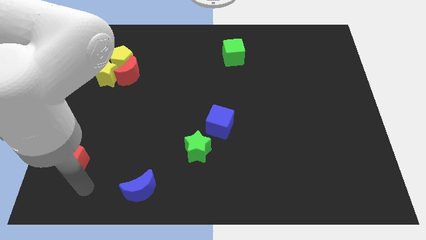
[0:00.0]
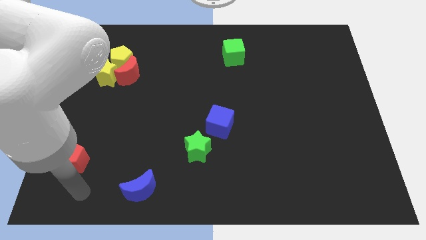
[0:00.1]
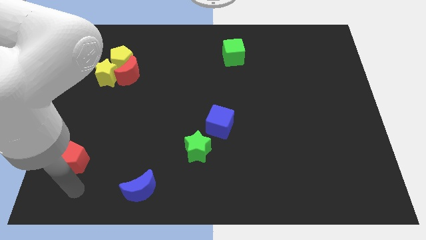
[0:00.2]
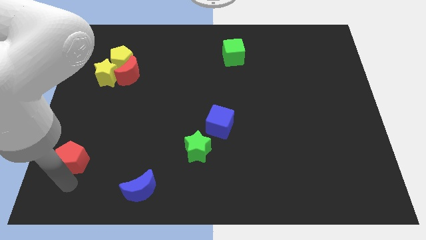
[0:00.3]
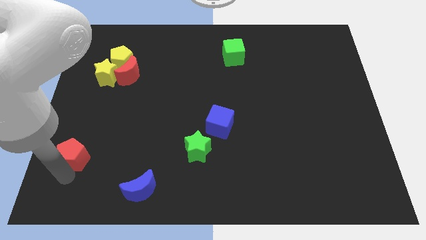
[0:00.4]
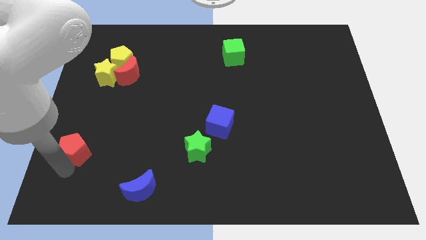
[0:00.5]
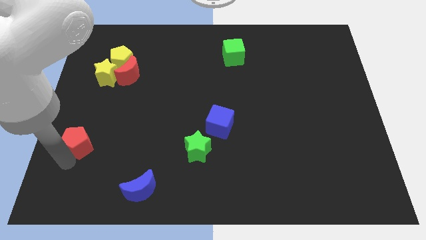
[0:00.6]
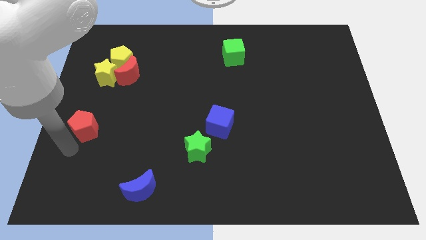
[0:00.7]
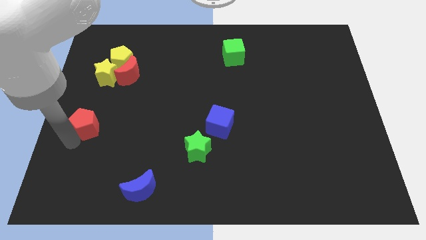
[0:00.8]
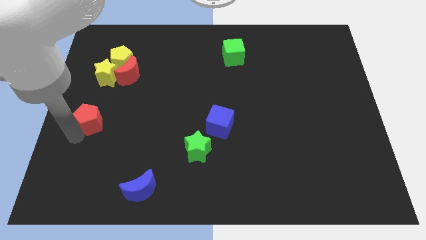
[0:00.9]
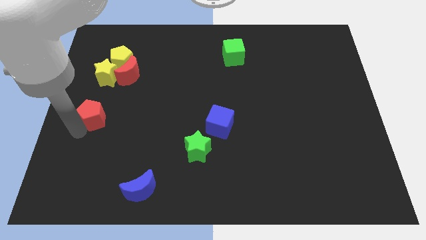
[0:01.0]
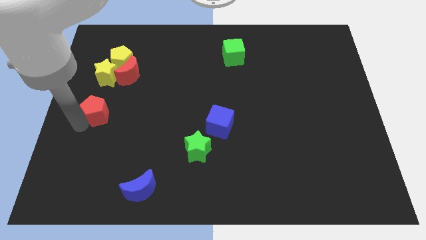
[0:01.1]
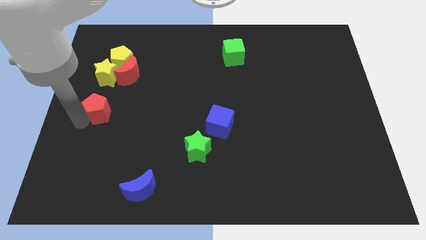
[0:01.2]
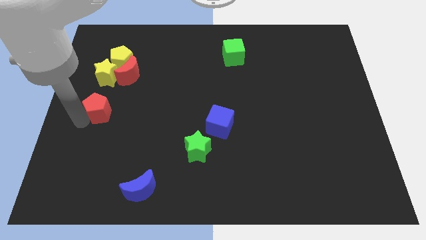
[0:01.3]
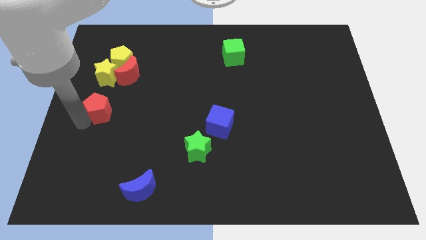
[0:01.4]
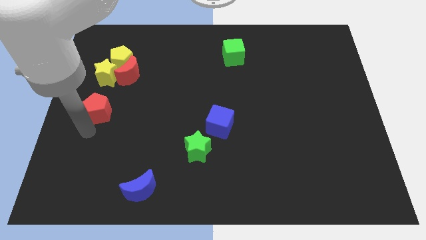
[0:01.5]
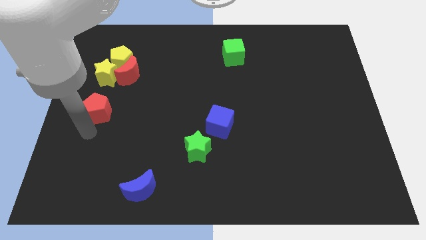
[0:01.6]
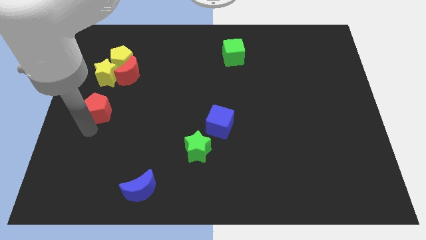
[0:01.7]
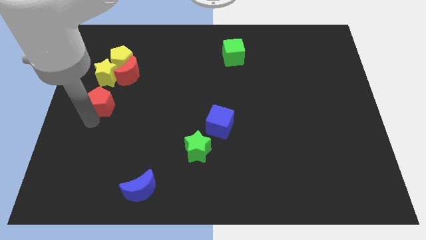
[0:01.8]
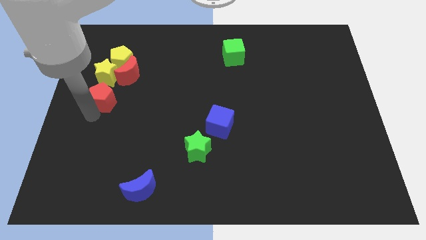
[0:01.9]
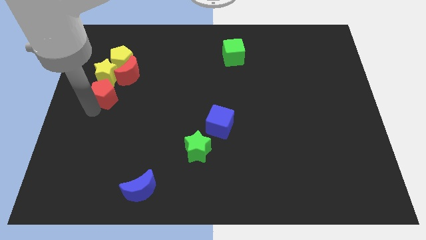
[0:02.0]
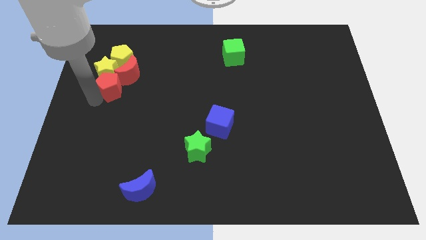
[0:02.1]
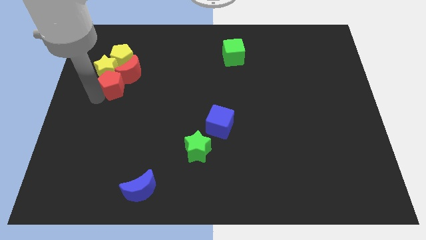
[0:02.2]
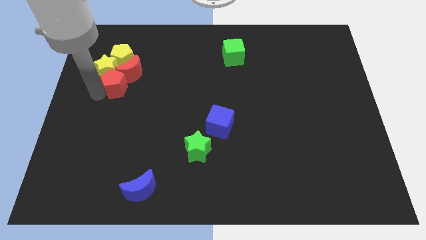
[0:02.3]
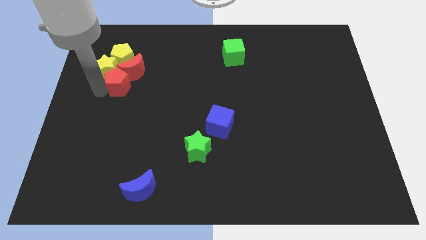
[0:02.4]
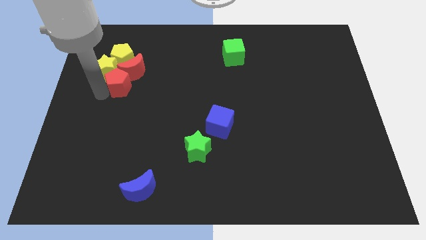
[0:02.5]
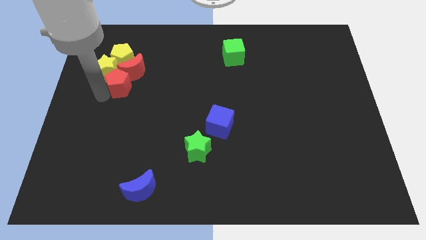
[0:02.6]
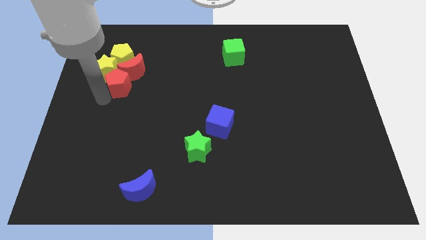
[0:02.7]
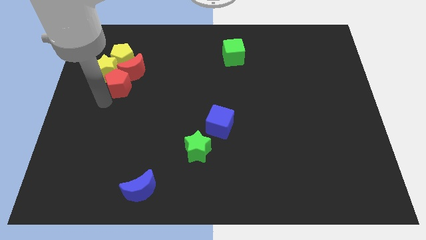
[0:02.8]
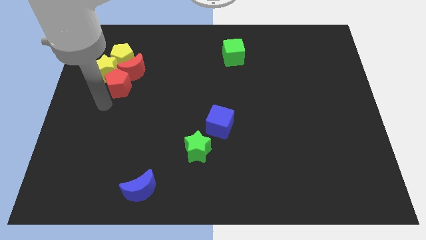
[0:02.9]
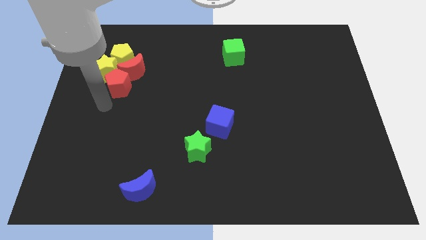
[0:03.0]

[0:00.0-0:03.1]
put the red blocks together

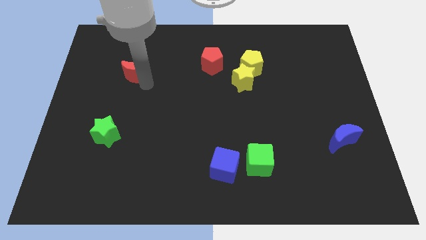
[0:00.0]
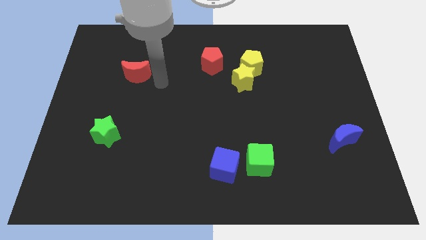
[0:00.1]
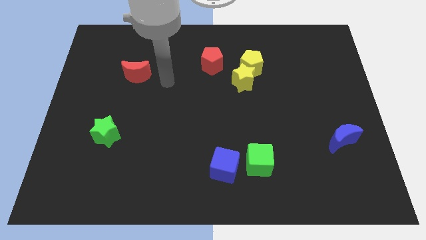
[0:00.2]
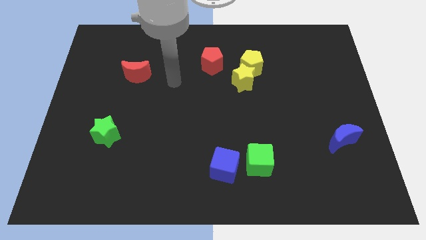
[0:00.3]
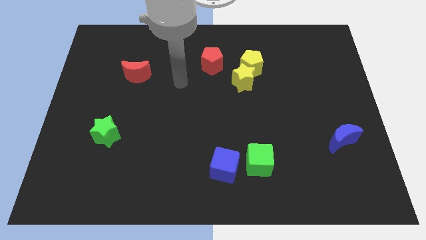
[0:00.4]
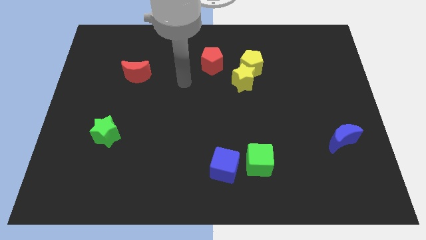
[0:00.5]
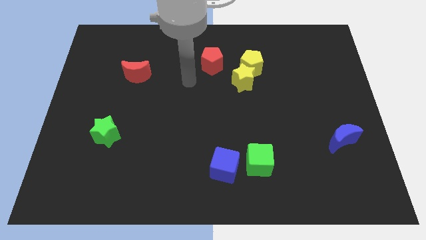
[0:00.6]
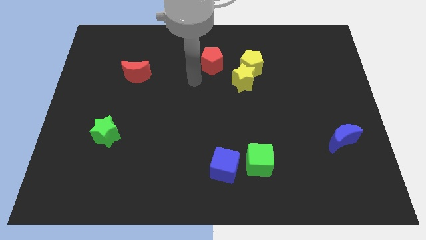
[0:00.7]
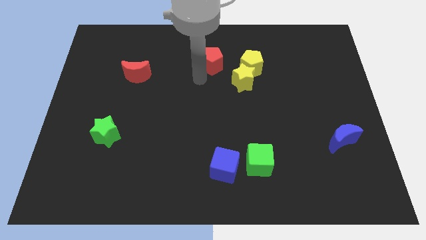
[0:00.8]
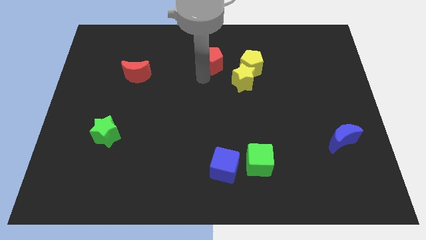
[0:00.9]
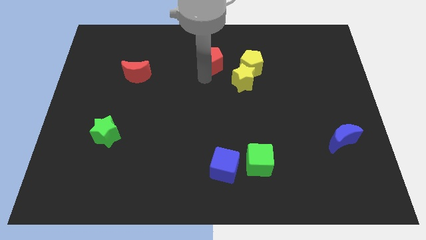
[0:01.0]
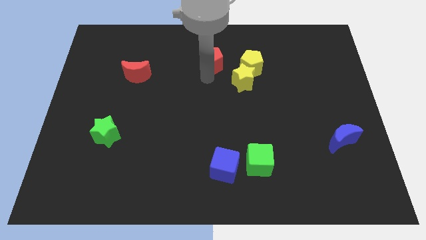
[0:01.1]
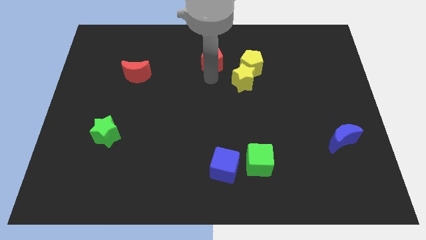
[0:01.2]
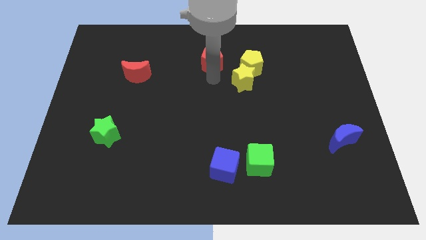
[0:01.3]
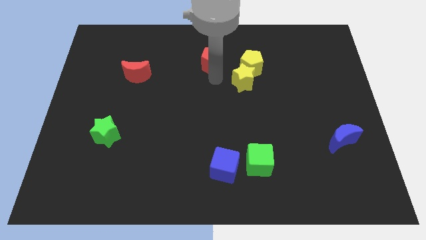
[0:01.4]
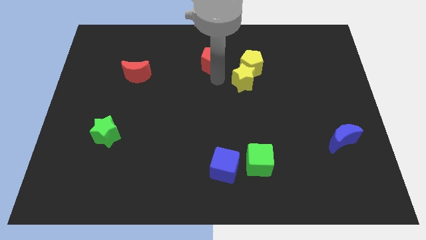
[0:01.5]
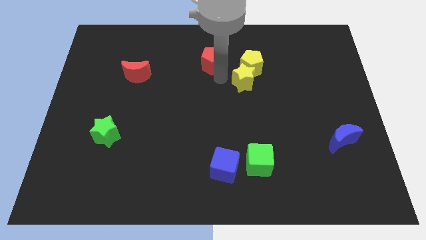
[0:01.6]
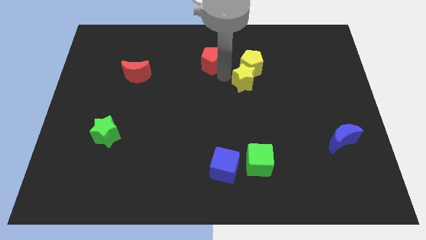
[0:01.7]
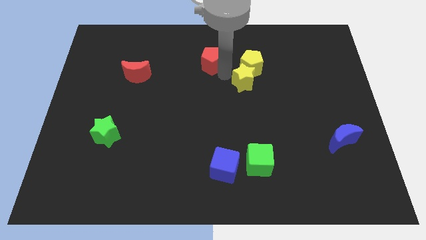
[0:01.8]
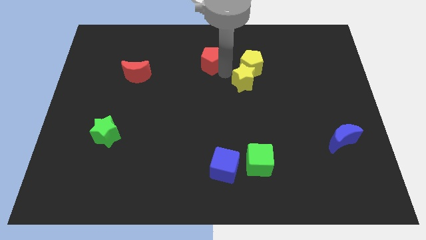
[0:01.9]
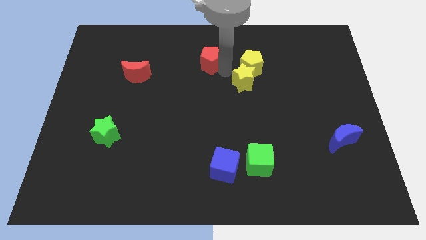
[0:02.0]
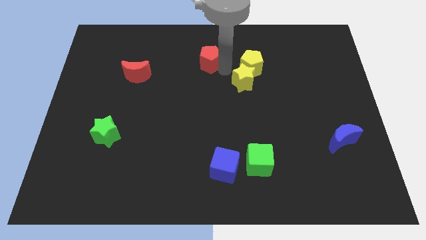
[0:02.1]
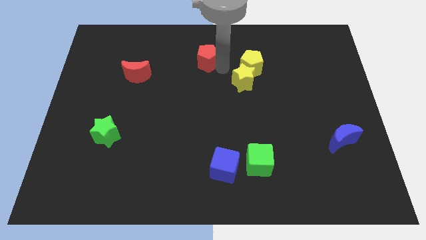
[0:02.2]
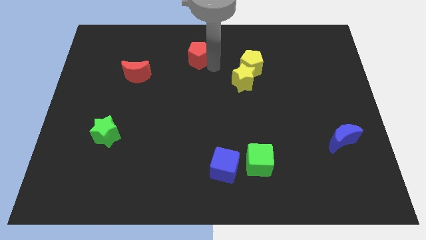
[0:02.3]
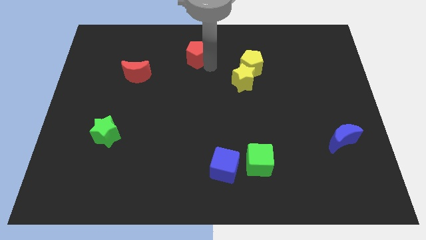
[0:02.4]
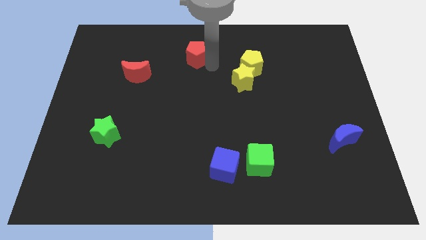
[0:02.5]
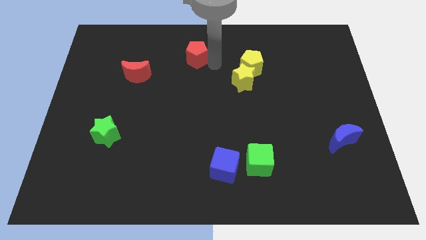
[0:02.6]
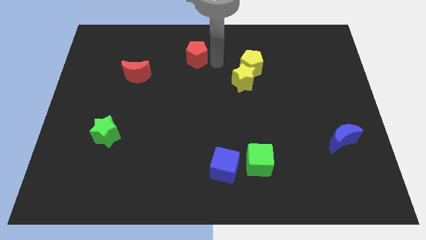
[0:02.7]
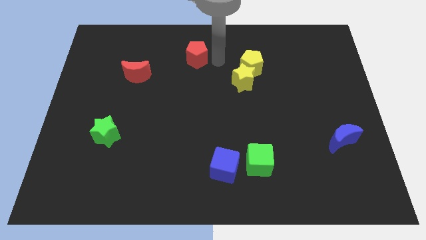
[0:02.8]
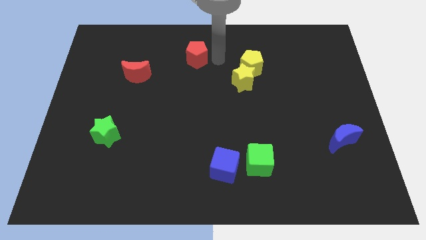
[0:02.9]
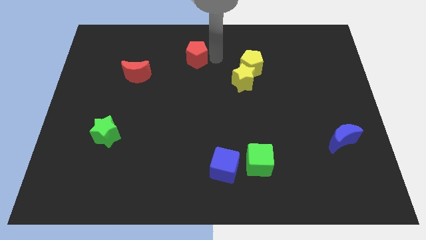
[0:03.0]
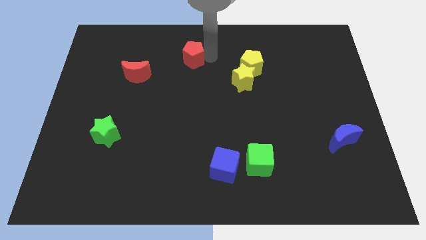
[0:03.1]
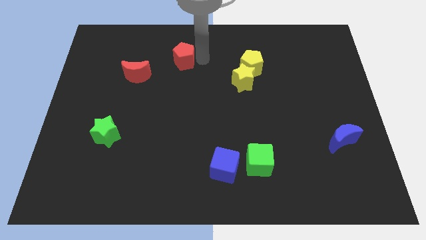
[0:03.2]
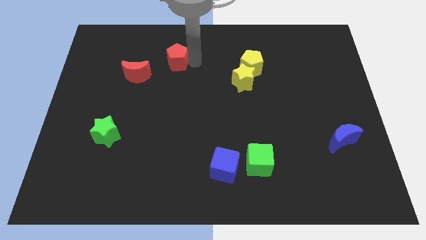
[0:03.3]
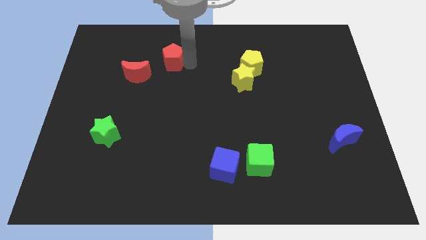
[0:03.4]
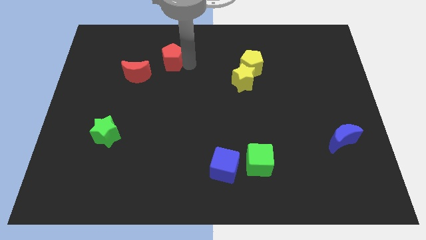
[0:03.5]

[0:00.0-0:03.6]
slide the red pentagon towards the red crescent

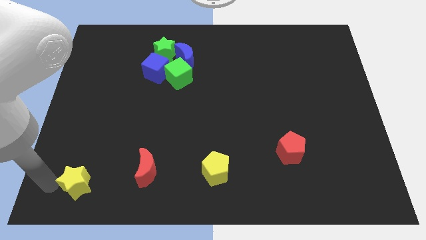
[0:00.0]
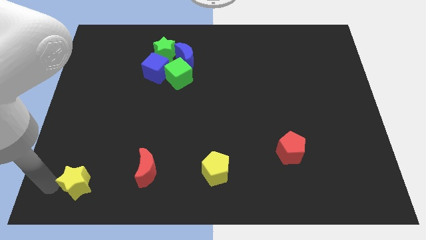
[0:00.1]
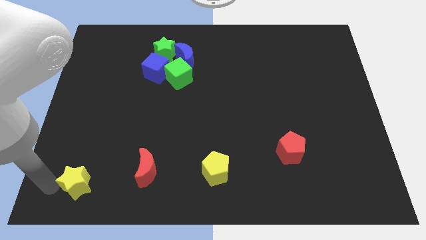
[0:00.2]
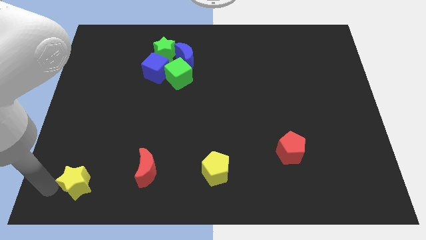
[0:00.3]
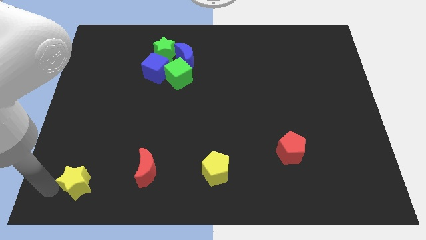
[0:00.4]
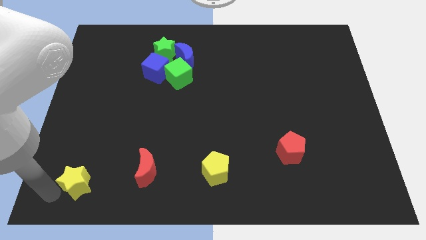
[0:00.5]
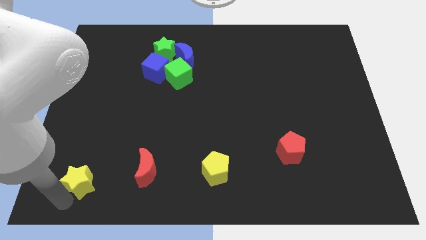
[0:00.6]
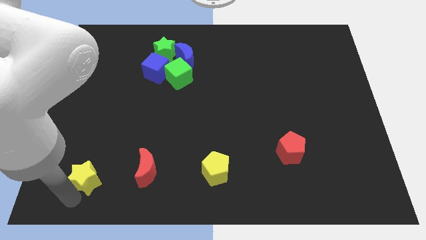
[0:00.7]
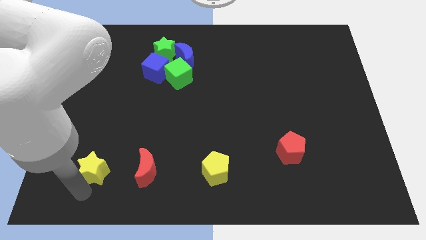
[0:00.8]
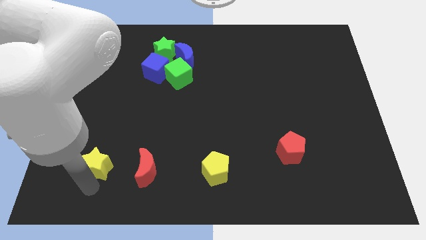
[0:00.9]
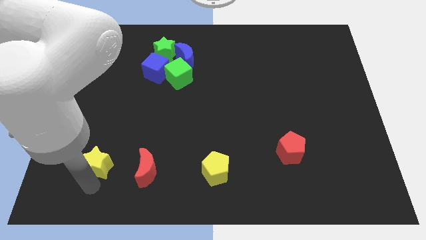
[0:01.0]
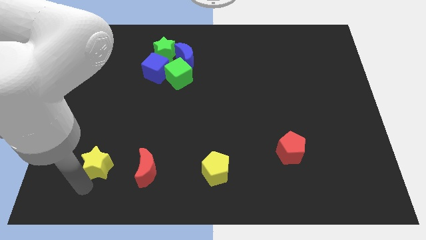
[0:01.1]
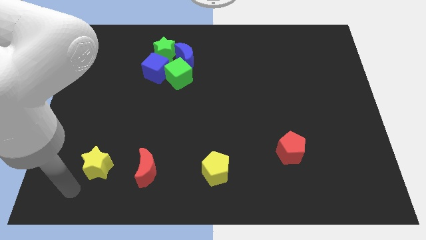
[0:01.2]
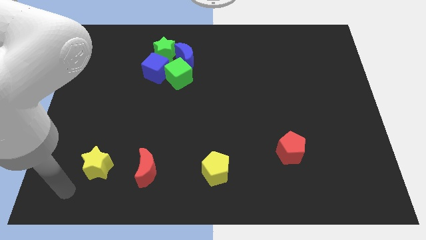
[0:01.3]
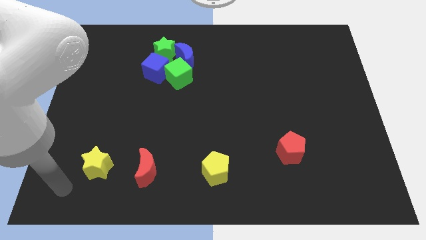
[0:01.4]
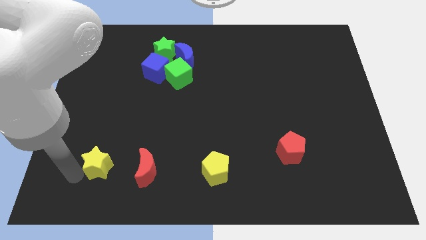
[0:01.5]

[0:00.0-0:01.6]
push the yellow moon slightly

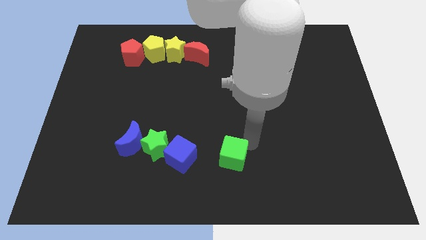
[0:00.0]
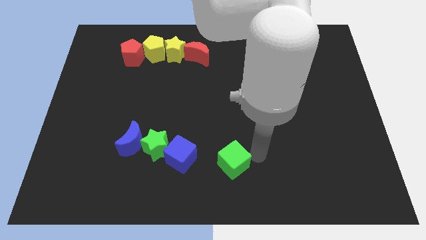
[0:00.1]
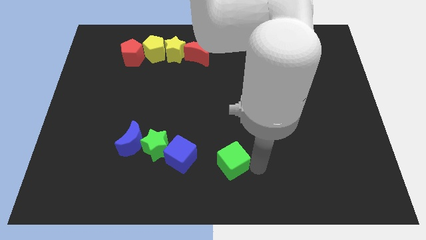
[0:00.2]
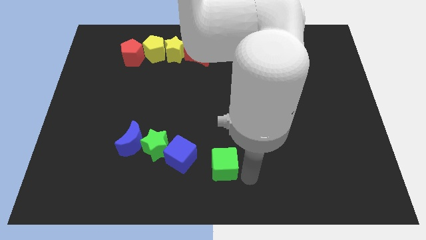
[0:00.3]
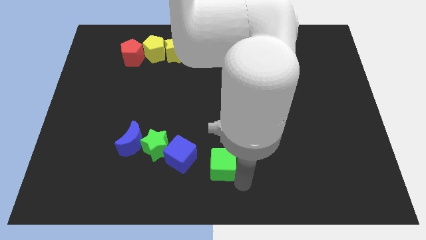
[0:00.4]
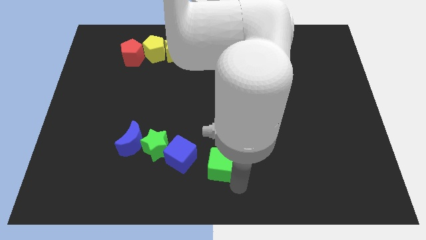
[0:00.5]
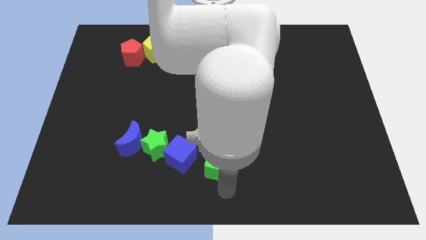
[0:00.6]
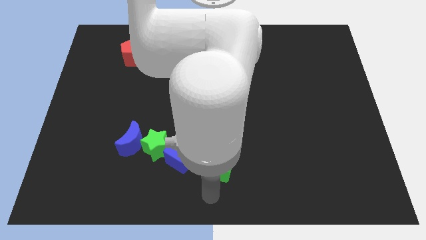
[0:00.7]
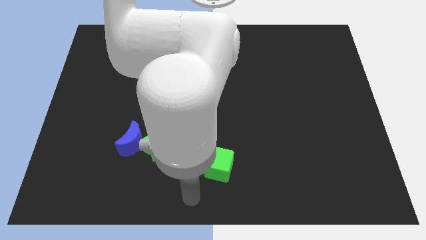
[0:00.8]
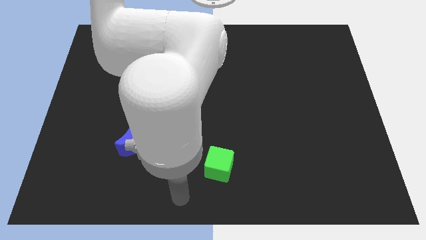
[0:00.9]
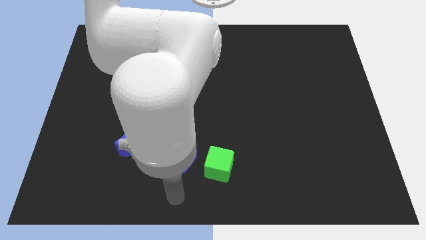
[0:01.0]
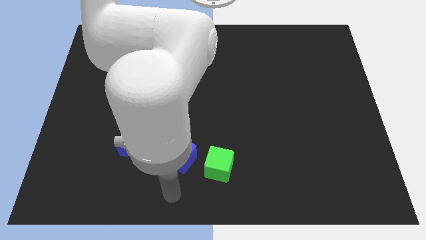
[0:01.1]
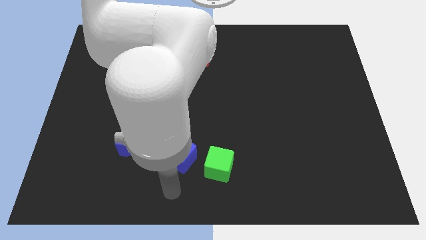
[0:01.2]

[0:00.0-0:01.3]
push the green cube to the right side of the blue cube
